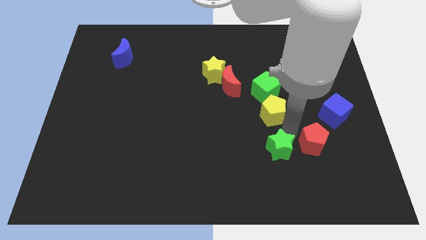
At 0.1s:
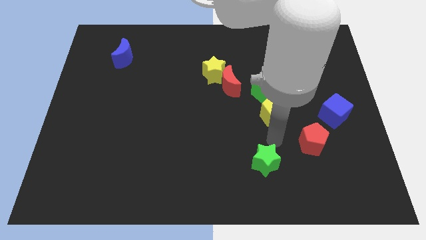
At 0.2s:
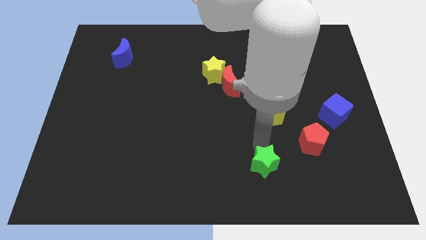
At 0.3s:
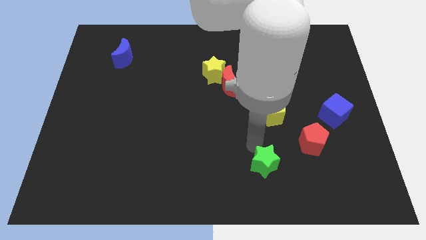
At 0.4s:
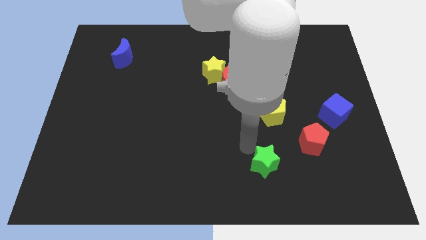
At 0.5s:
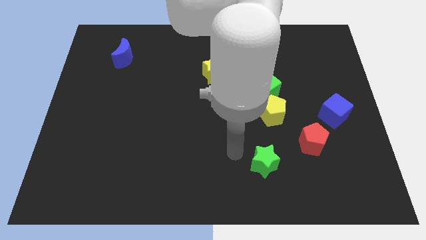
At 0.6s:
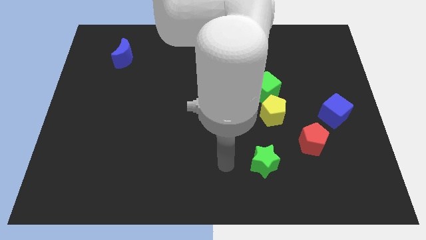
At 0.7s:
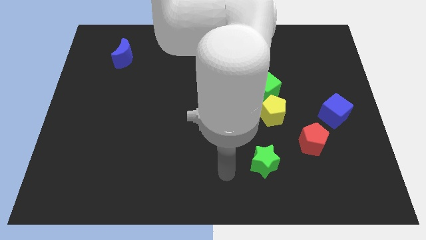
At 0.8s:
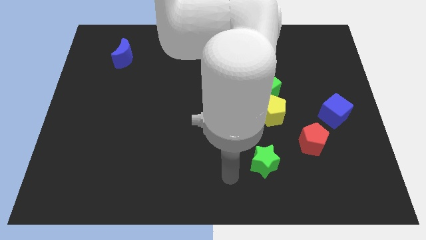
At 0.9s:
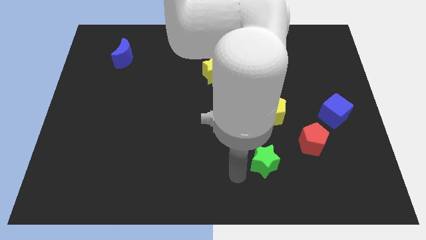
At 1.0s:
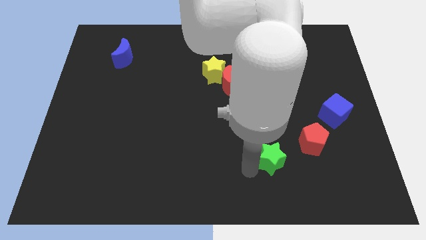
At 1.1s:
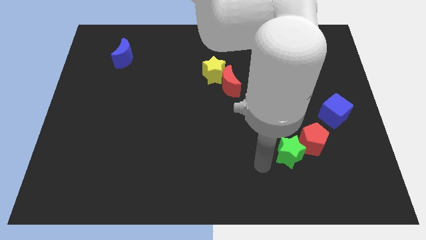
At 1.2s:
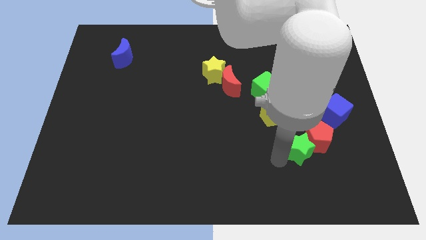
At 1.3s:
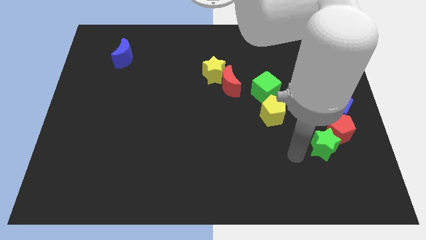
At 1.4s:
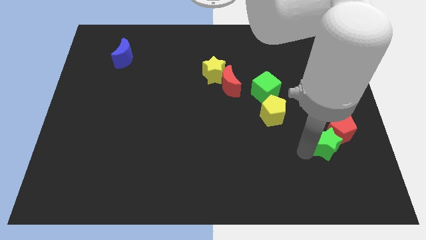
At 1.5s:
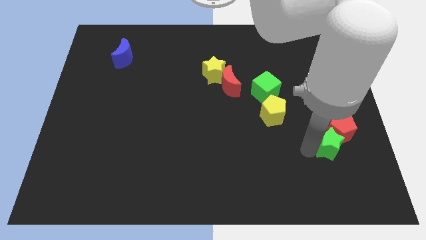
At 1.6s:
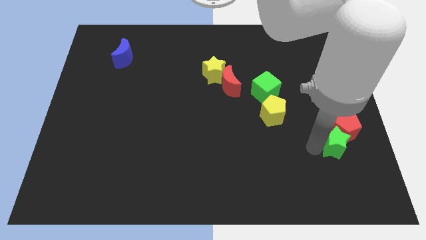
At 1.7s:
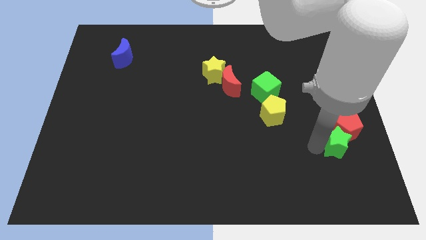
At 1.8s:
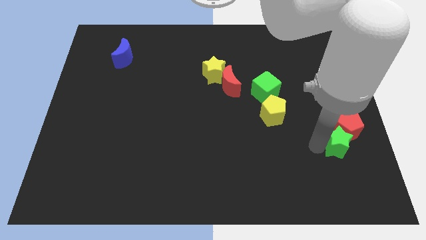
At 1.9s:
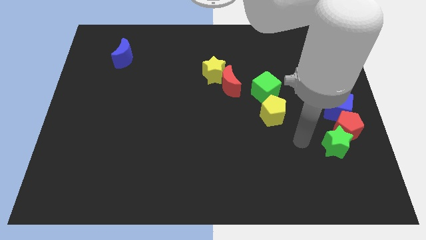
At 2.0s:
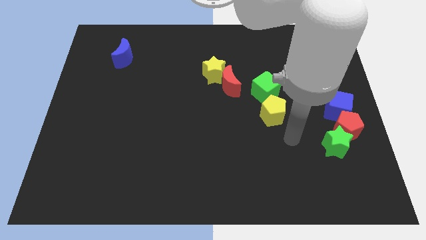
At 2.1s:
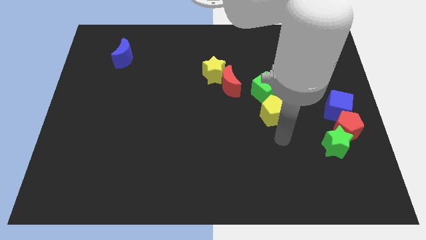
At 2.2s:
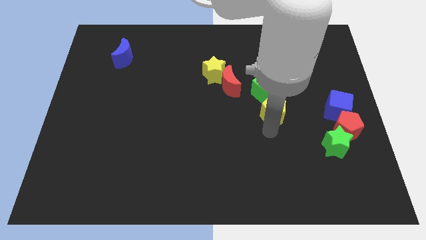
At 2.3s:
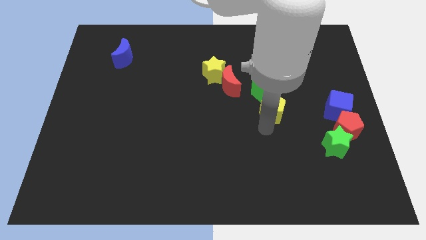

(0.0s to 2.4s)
move the green star vertically below the red pentagon

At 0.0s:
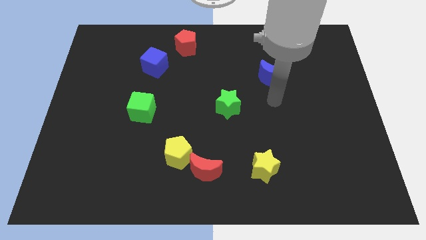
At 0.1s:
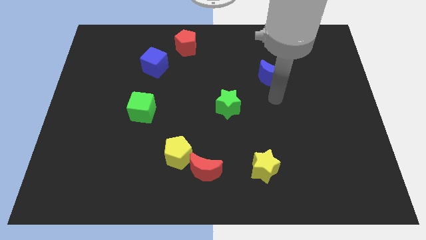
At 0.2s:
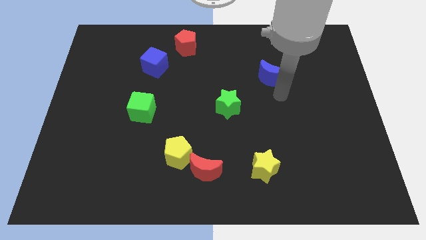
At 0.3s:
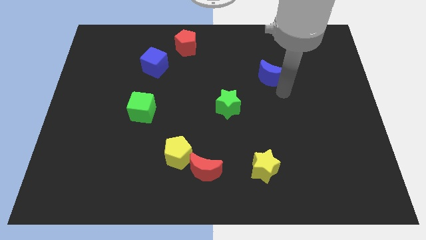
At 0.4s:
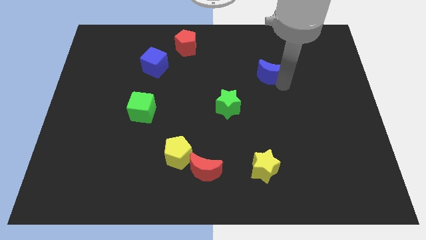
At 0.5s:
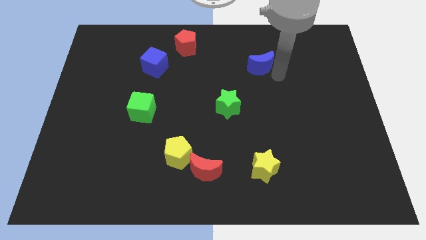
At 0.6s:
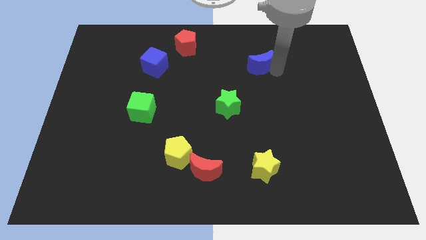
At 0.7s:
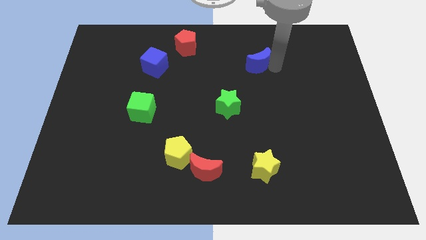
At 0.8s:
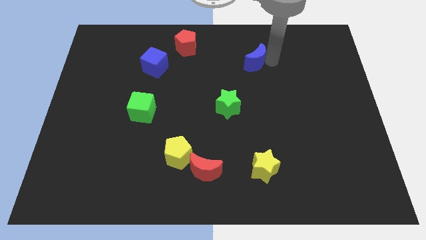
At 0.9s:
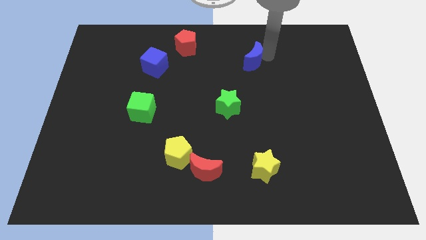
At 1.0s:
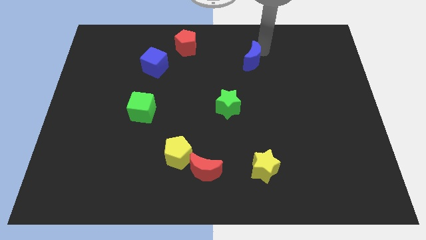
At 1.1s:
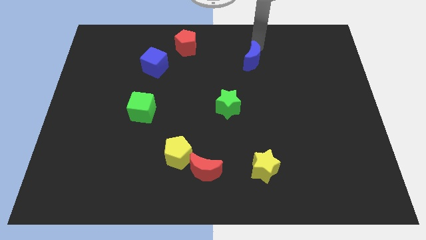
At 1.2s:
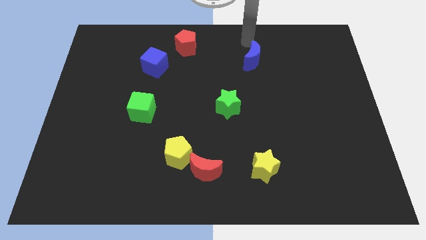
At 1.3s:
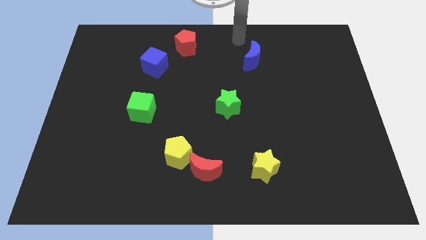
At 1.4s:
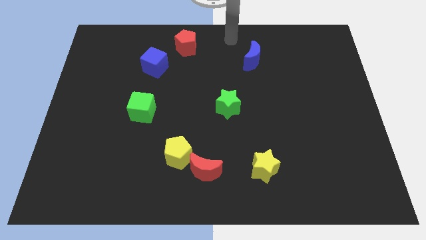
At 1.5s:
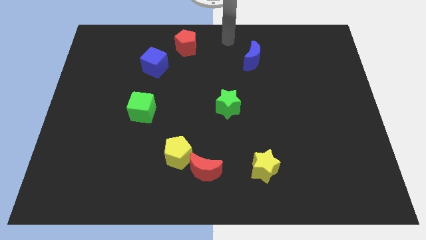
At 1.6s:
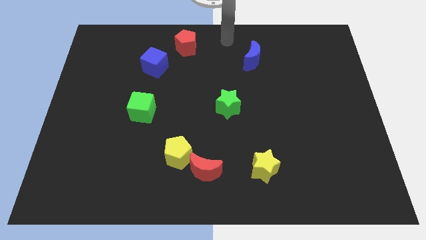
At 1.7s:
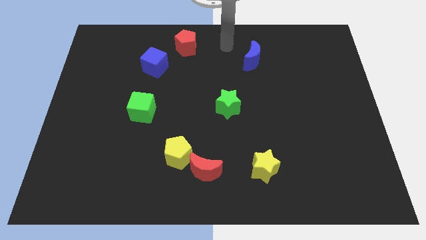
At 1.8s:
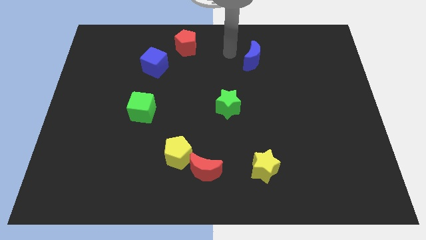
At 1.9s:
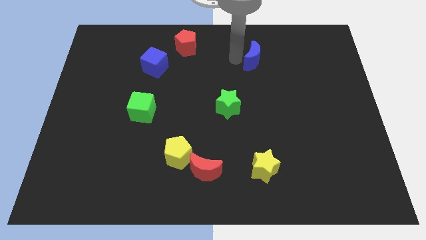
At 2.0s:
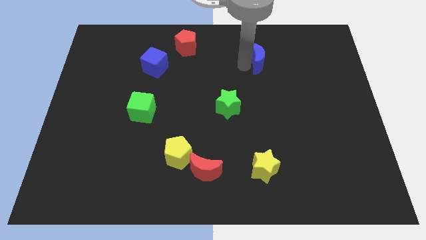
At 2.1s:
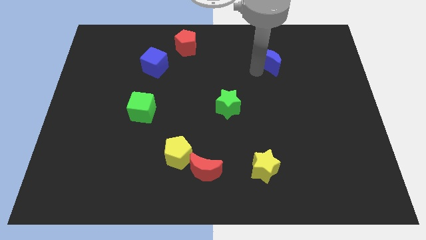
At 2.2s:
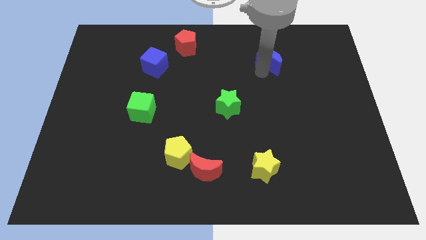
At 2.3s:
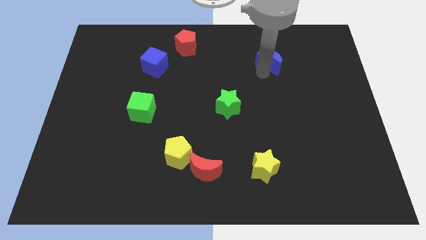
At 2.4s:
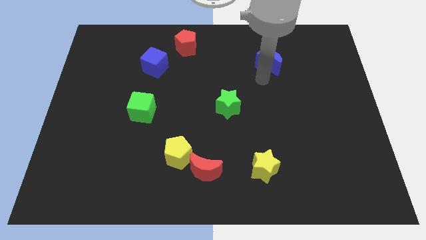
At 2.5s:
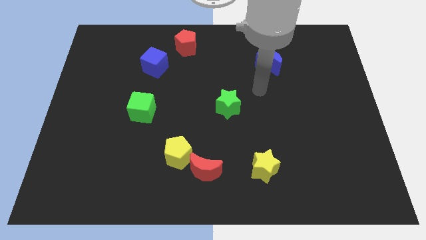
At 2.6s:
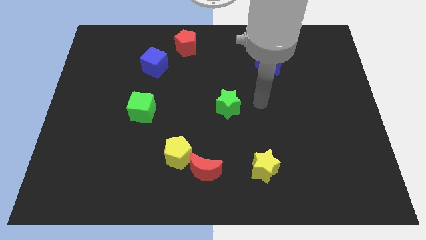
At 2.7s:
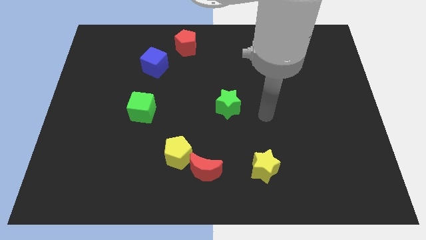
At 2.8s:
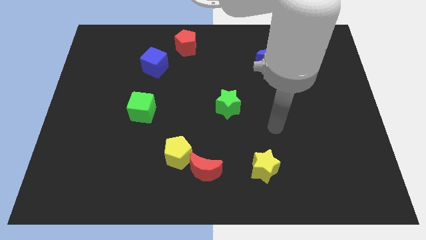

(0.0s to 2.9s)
push the yellow star vertically below blue moon

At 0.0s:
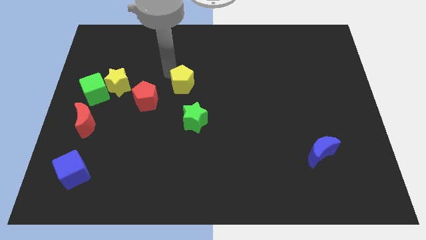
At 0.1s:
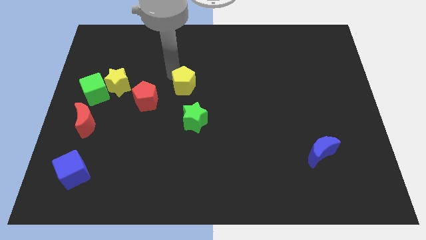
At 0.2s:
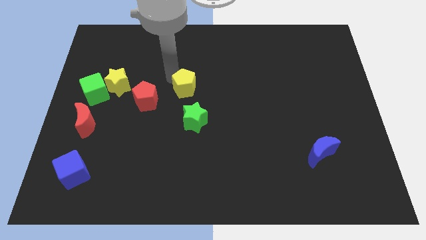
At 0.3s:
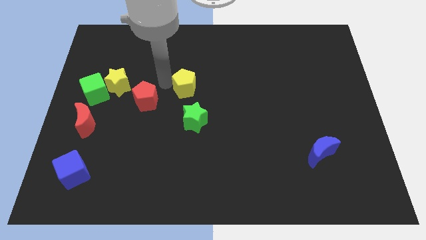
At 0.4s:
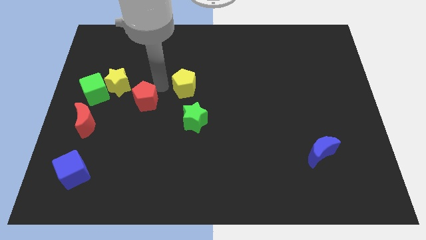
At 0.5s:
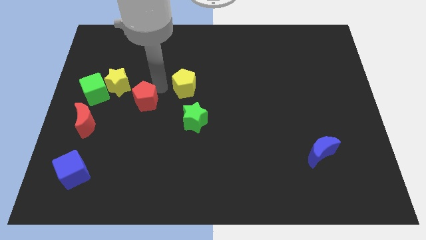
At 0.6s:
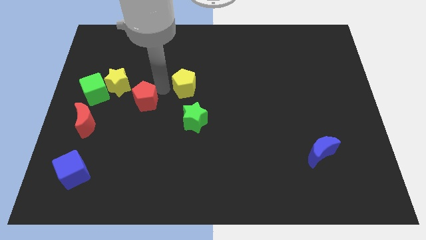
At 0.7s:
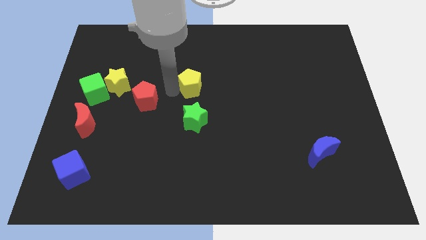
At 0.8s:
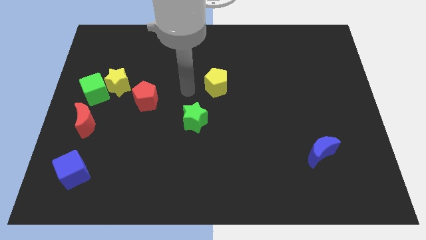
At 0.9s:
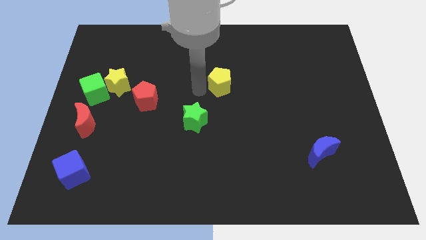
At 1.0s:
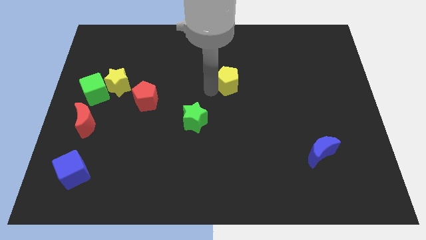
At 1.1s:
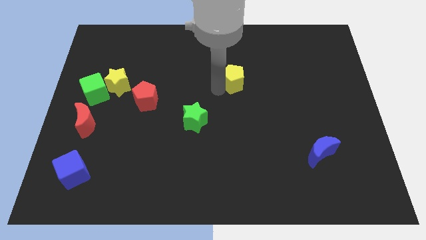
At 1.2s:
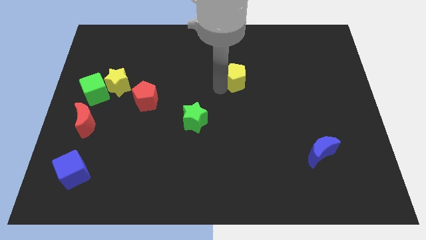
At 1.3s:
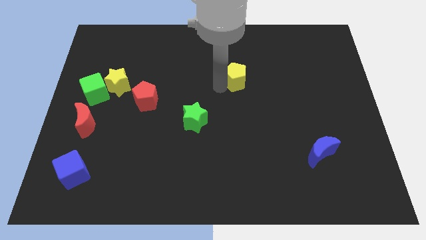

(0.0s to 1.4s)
move the yellow pentagon diagonally top right to the green star

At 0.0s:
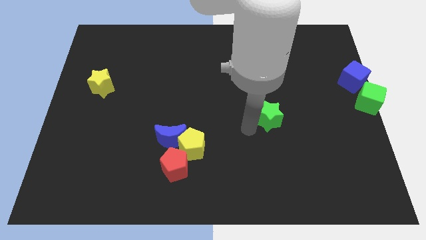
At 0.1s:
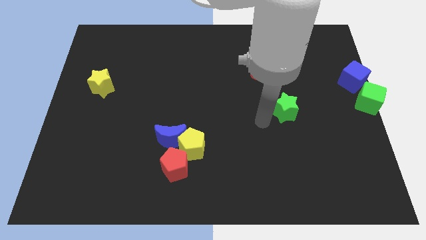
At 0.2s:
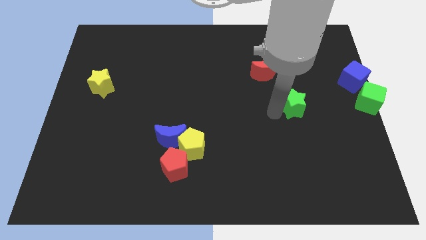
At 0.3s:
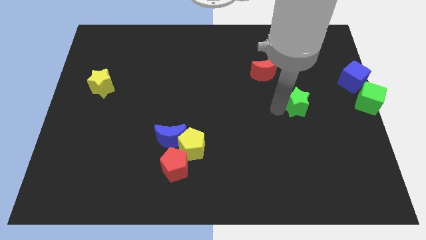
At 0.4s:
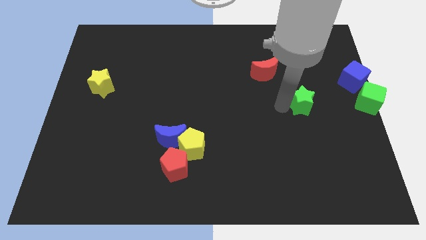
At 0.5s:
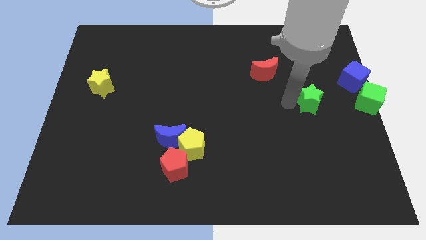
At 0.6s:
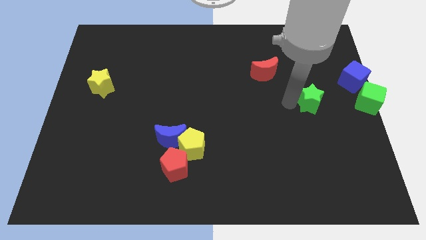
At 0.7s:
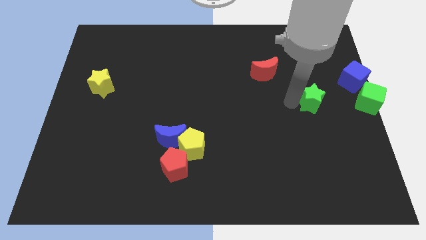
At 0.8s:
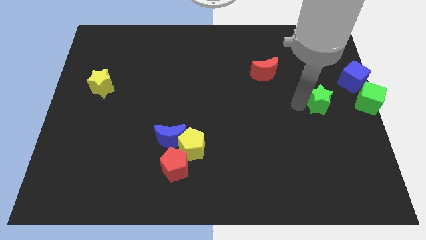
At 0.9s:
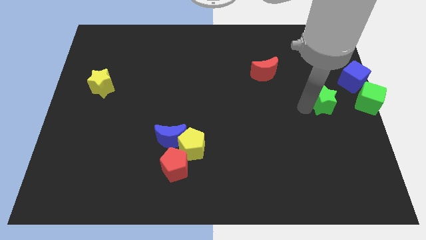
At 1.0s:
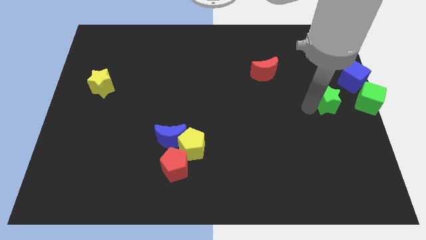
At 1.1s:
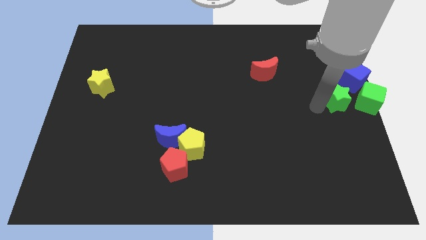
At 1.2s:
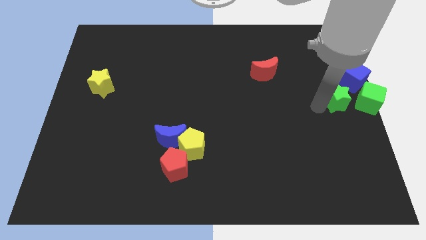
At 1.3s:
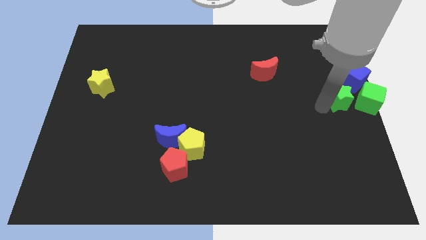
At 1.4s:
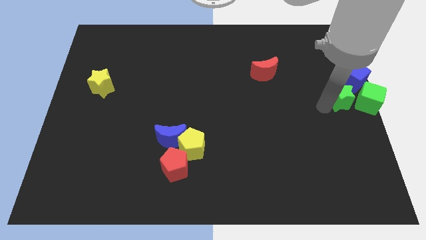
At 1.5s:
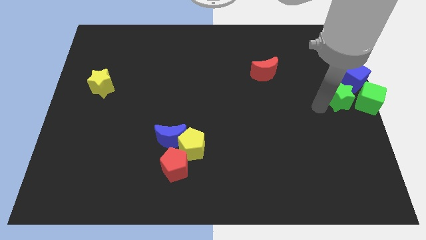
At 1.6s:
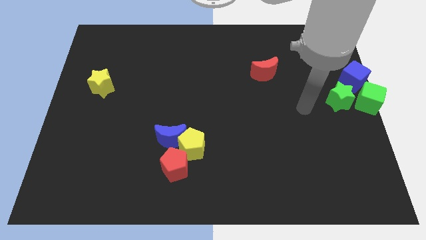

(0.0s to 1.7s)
move the green star left to the green cube

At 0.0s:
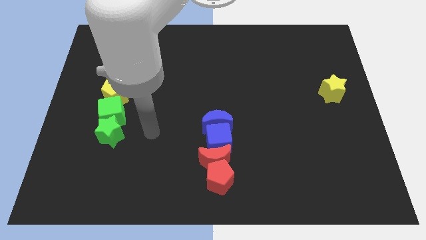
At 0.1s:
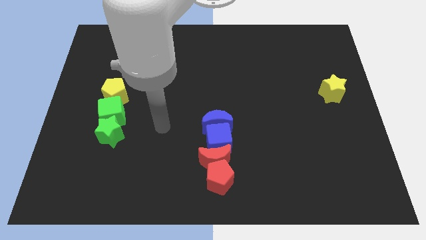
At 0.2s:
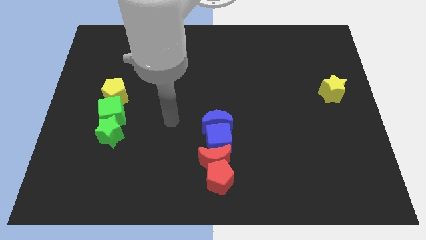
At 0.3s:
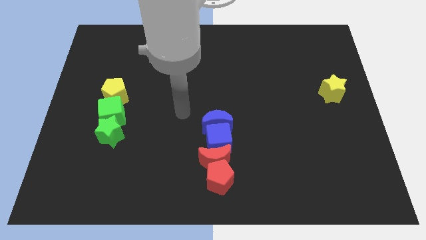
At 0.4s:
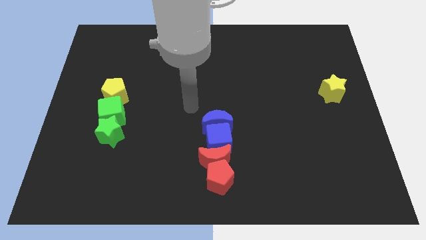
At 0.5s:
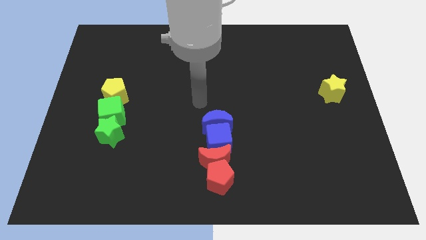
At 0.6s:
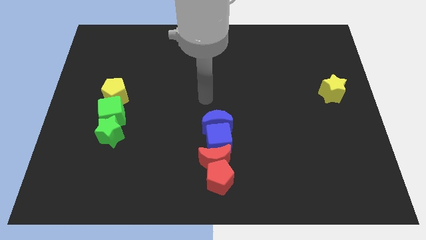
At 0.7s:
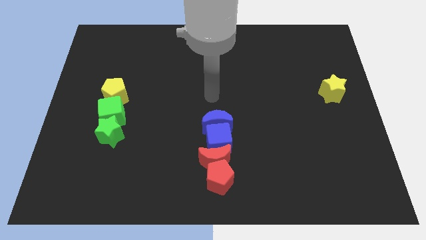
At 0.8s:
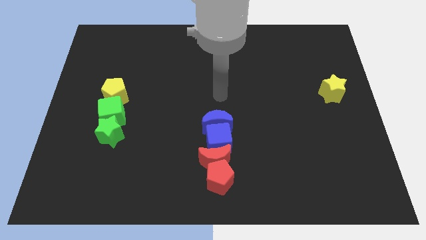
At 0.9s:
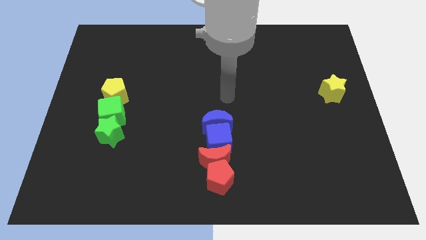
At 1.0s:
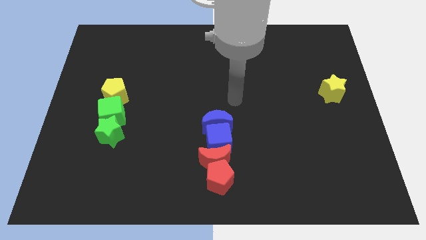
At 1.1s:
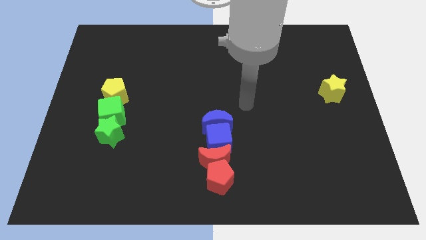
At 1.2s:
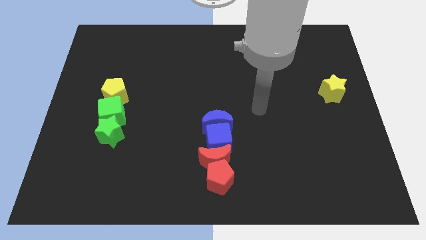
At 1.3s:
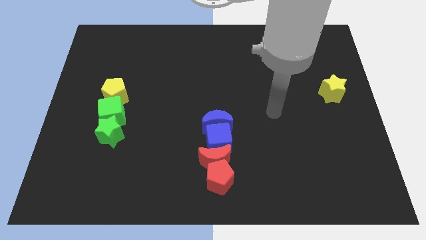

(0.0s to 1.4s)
move your arm to the centre of the board
